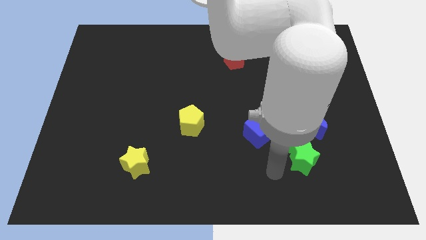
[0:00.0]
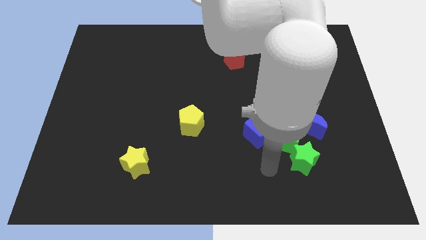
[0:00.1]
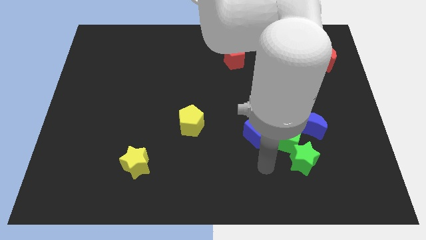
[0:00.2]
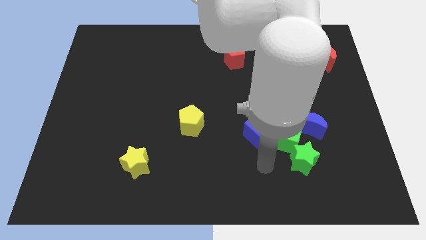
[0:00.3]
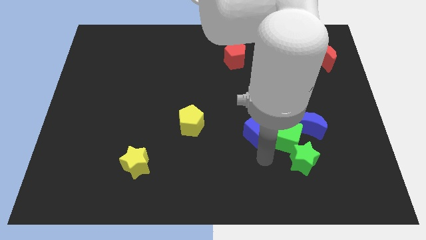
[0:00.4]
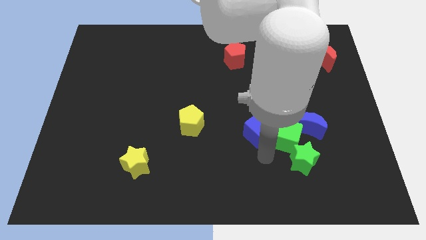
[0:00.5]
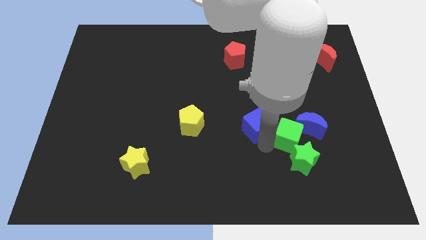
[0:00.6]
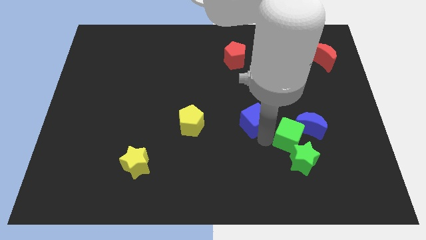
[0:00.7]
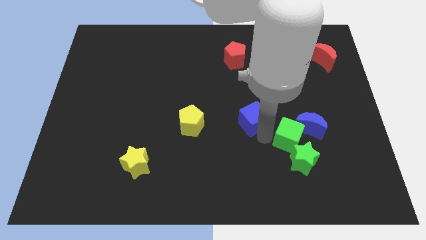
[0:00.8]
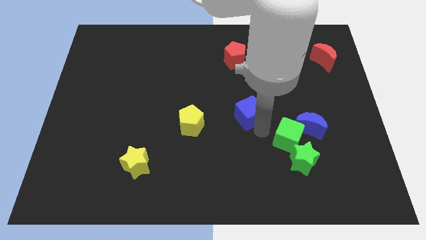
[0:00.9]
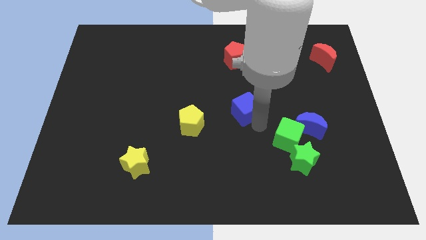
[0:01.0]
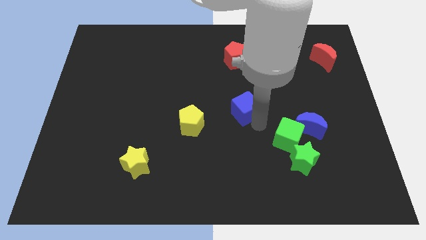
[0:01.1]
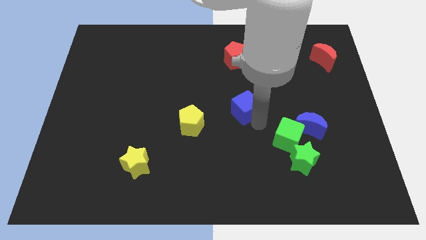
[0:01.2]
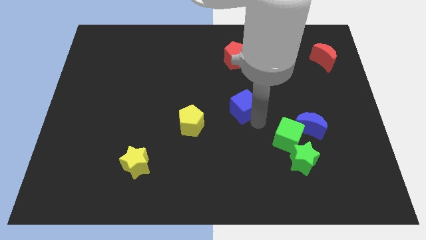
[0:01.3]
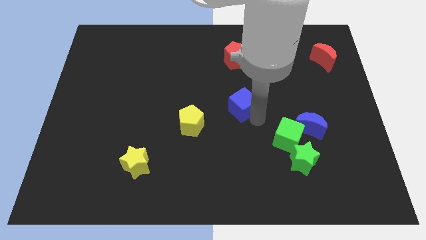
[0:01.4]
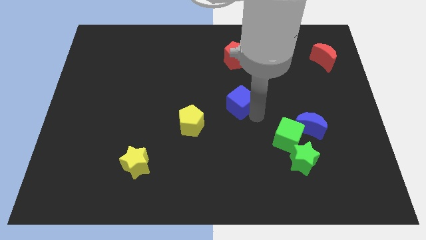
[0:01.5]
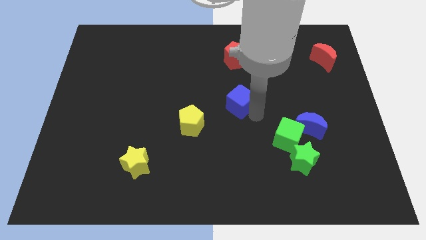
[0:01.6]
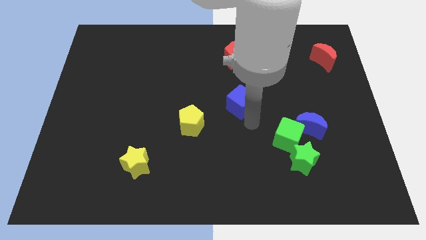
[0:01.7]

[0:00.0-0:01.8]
place the blue cube below the red pentagon

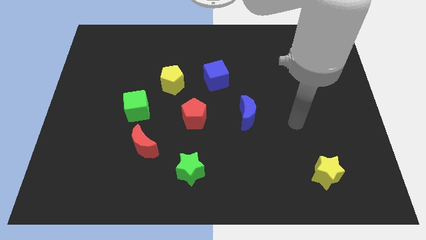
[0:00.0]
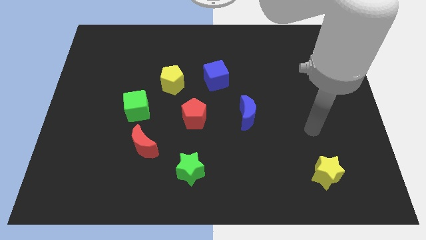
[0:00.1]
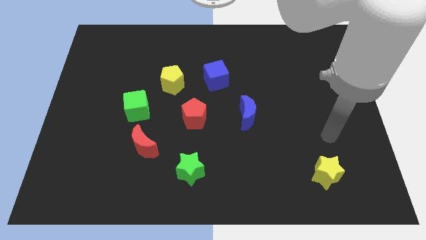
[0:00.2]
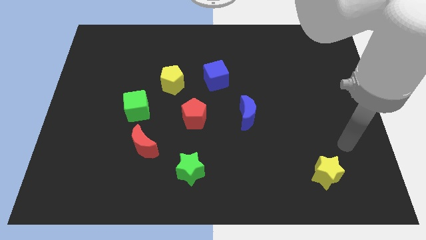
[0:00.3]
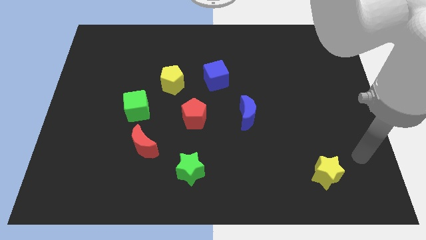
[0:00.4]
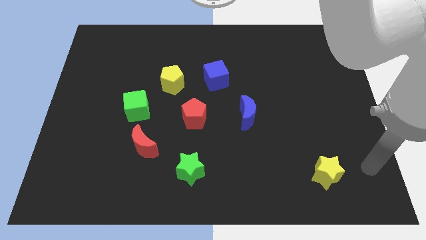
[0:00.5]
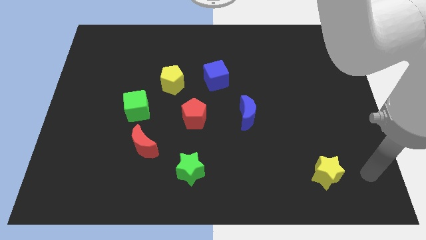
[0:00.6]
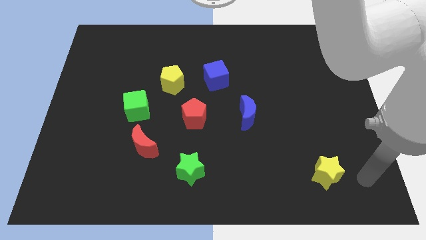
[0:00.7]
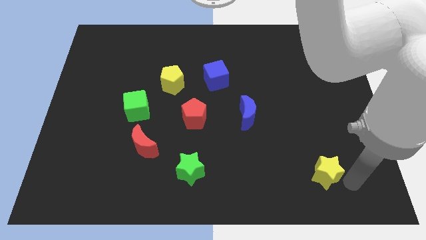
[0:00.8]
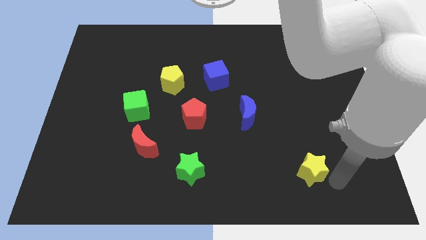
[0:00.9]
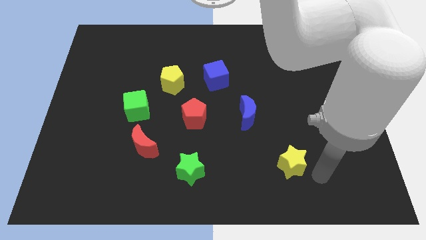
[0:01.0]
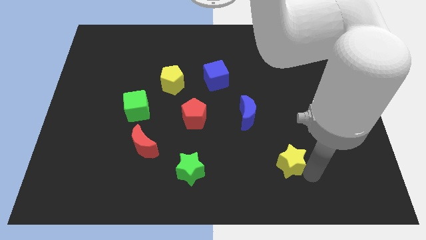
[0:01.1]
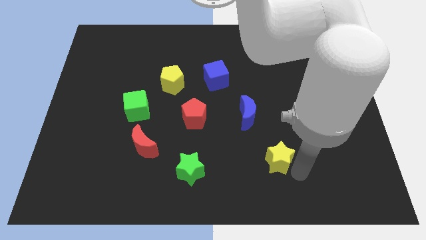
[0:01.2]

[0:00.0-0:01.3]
move the yellow star towards red pentagon

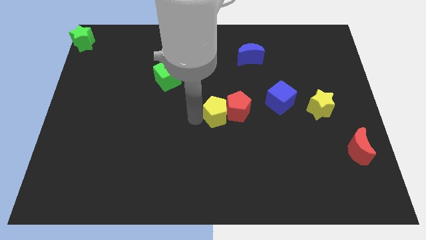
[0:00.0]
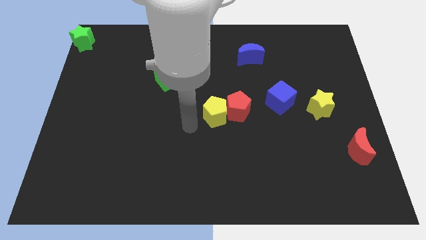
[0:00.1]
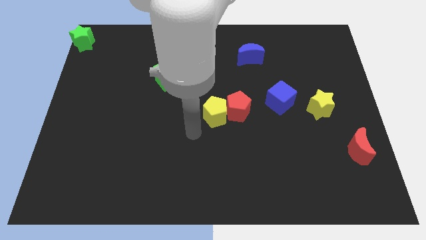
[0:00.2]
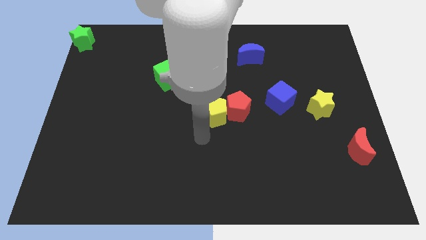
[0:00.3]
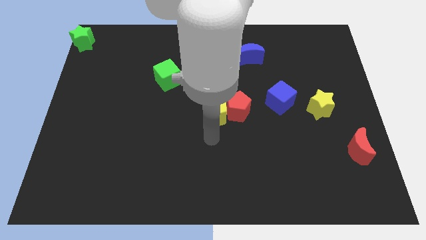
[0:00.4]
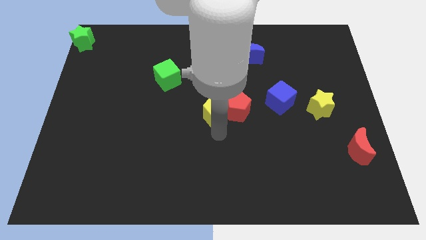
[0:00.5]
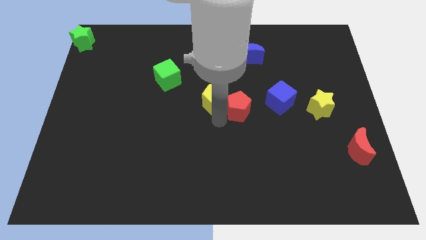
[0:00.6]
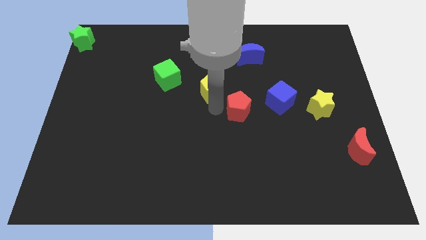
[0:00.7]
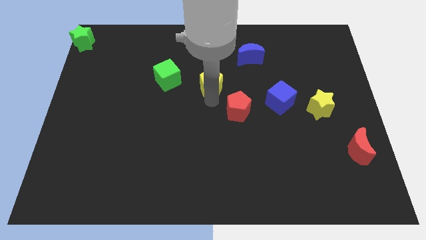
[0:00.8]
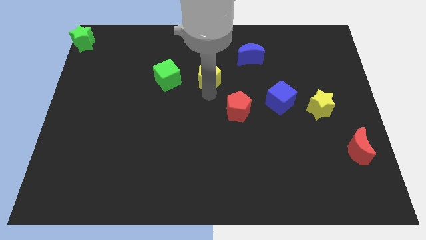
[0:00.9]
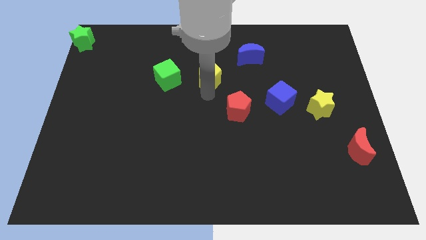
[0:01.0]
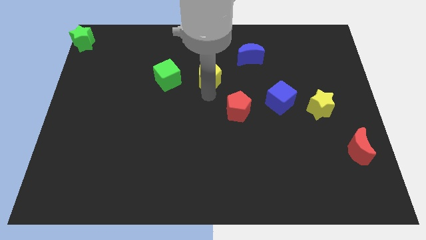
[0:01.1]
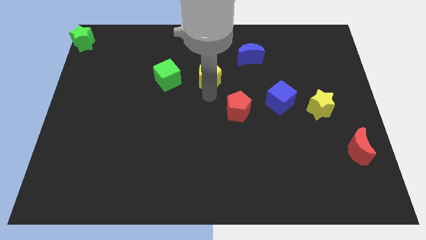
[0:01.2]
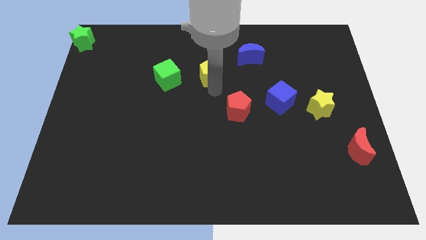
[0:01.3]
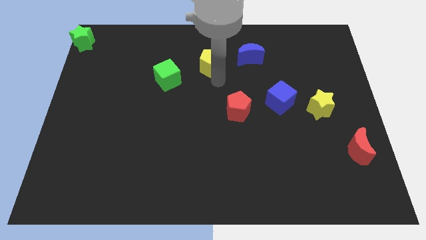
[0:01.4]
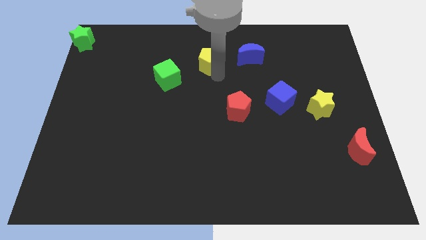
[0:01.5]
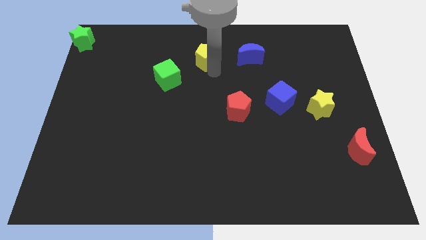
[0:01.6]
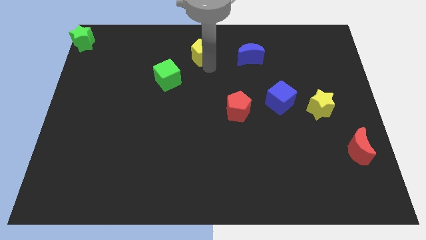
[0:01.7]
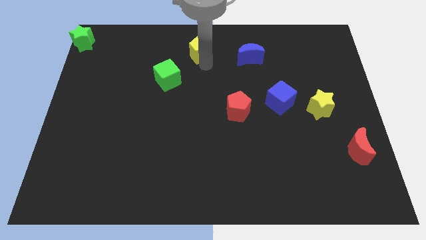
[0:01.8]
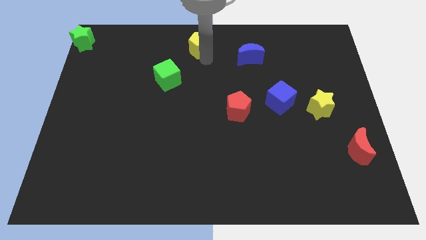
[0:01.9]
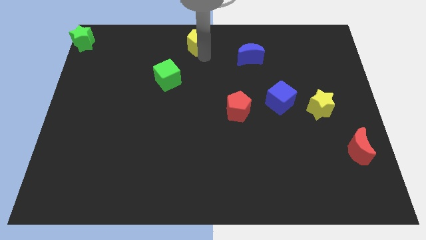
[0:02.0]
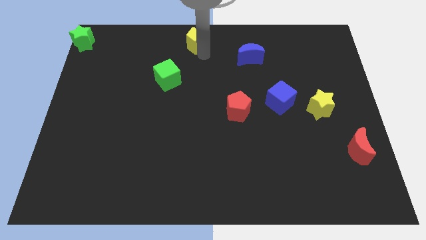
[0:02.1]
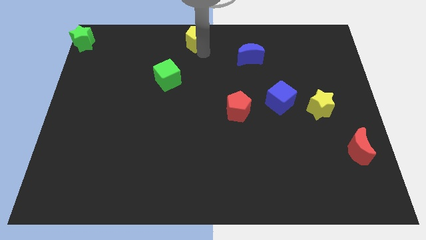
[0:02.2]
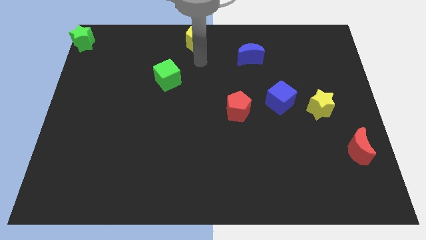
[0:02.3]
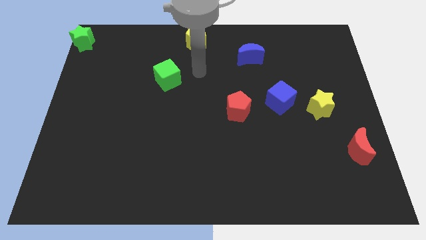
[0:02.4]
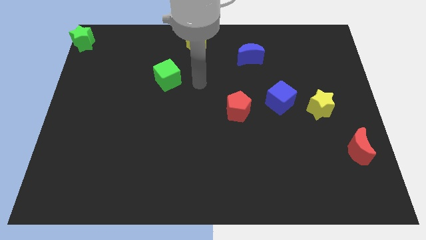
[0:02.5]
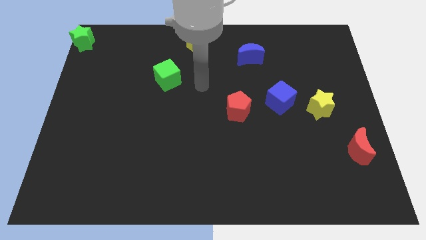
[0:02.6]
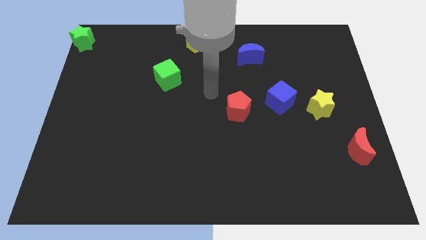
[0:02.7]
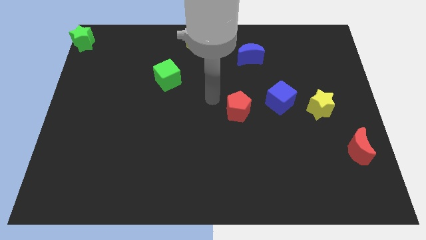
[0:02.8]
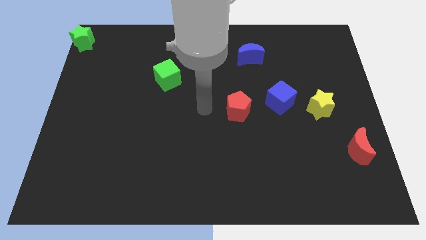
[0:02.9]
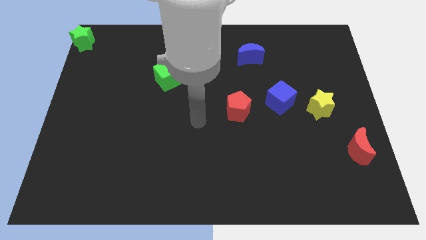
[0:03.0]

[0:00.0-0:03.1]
move yellow pentagon to the top middle

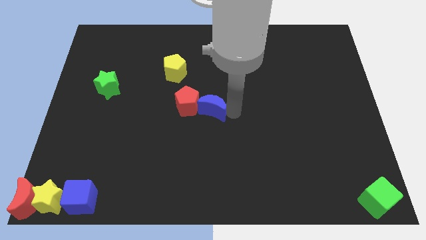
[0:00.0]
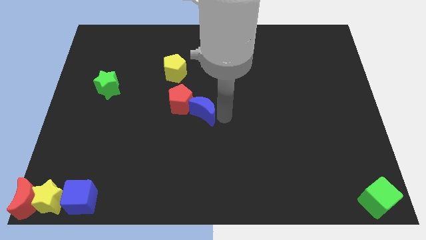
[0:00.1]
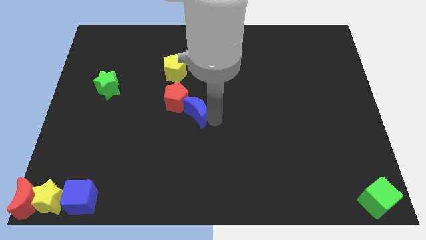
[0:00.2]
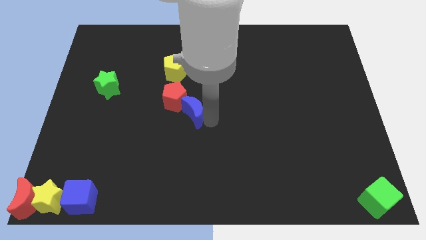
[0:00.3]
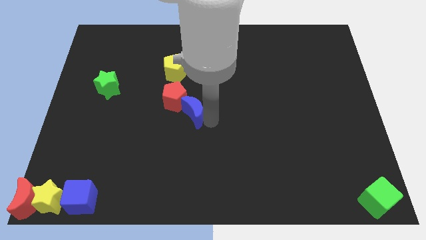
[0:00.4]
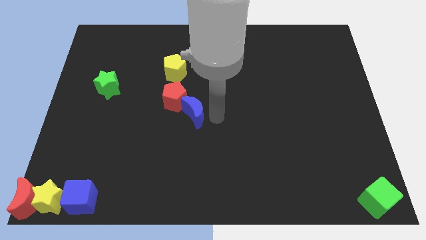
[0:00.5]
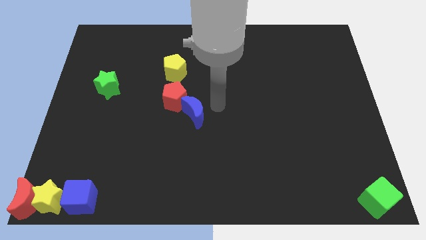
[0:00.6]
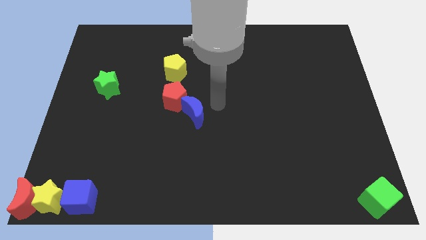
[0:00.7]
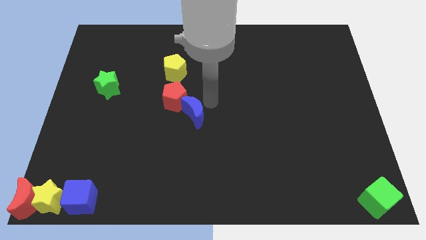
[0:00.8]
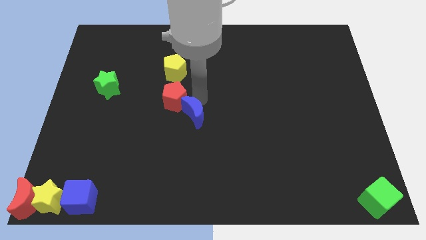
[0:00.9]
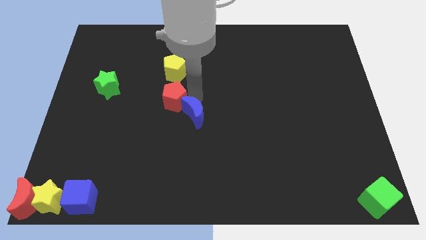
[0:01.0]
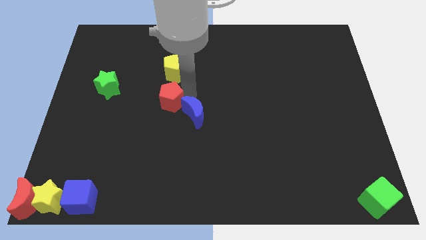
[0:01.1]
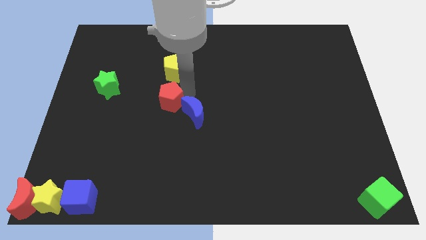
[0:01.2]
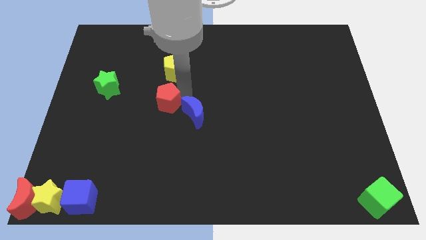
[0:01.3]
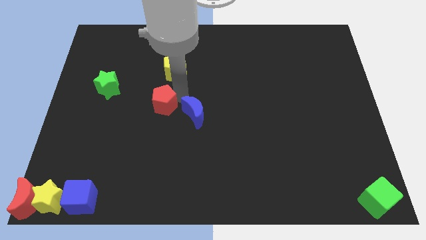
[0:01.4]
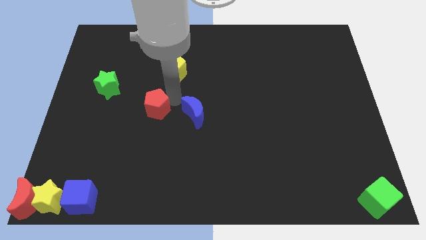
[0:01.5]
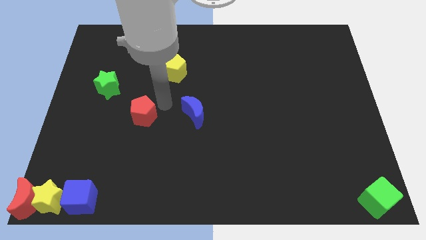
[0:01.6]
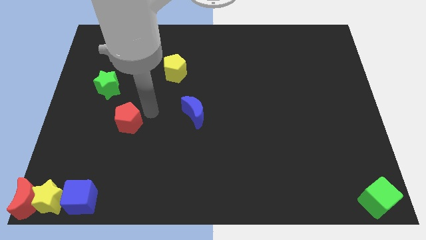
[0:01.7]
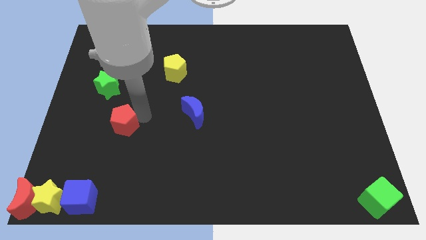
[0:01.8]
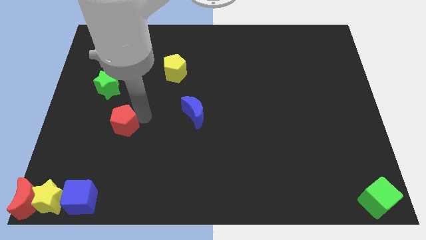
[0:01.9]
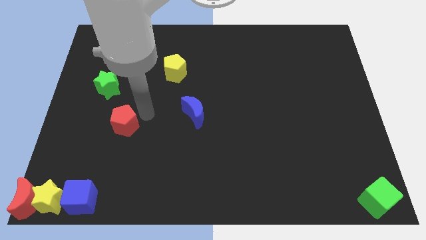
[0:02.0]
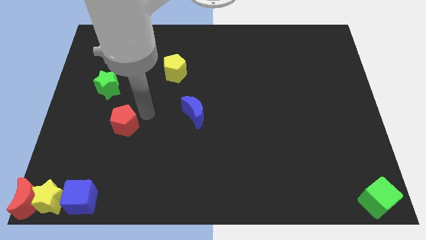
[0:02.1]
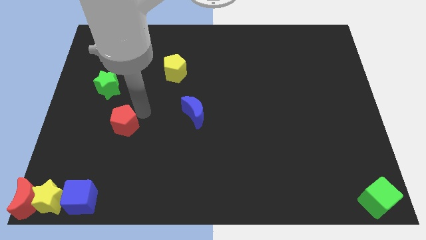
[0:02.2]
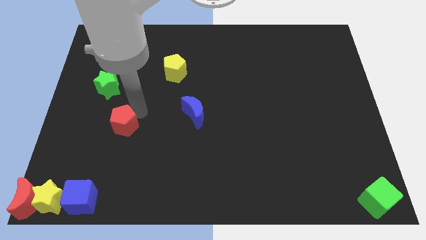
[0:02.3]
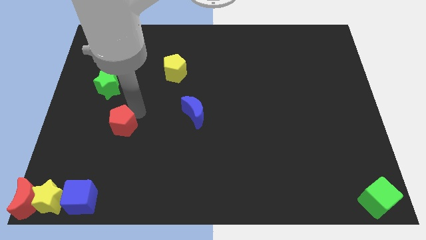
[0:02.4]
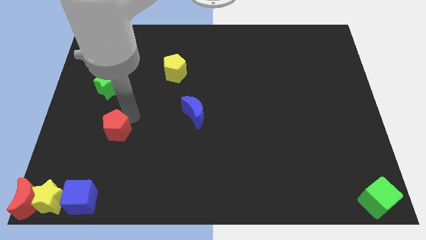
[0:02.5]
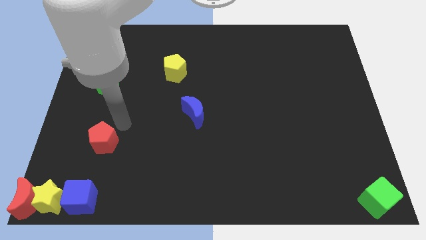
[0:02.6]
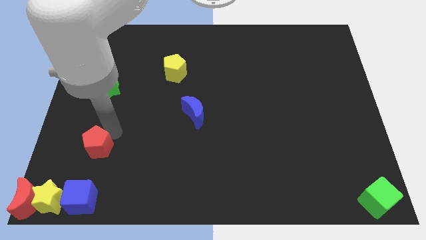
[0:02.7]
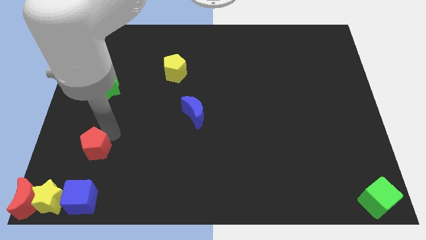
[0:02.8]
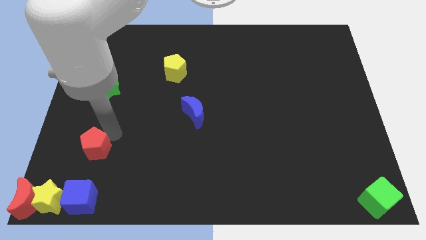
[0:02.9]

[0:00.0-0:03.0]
move the red pentagon down to the green star
